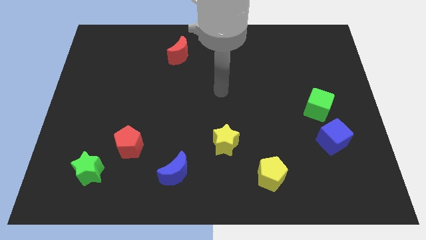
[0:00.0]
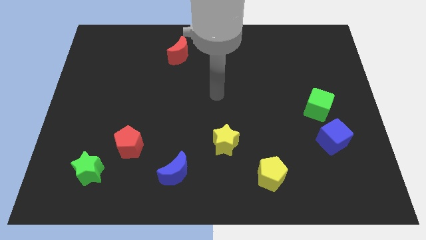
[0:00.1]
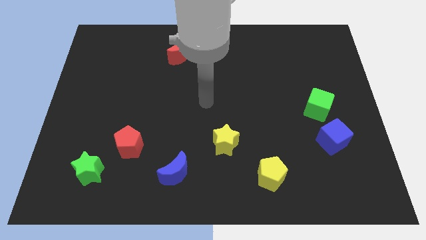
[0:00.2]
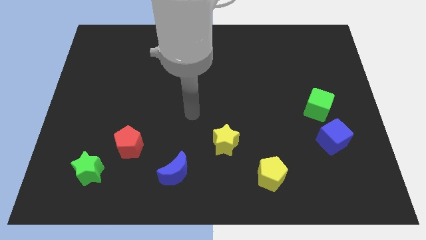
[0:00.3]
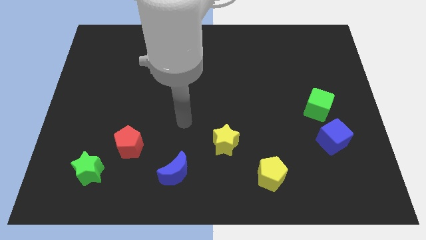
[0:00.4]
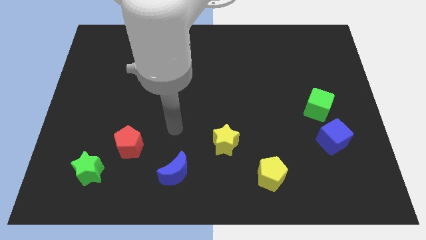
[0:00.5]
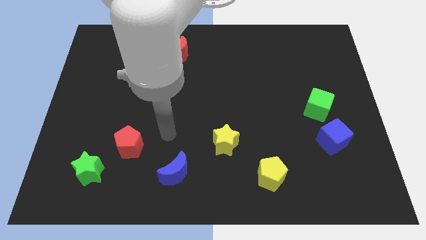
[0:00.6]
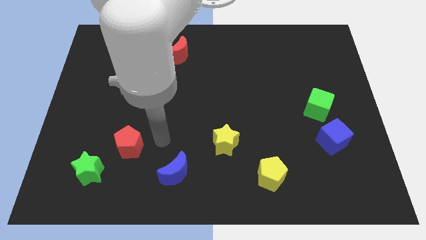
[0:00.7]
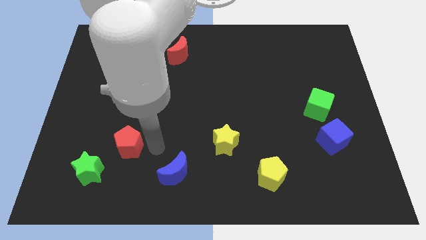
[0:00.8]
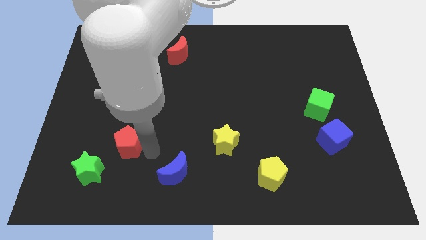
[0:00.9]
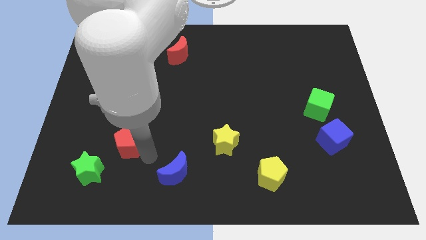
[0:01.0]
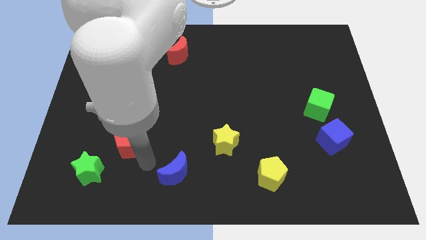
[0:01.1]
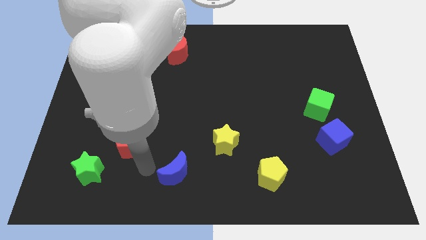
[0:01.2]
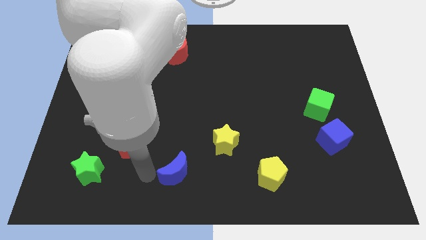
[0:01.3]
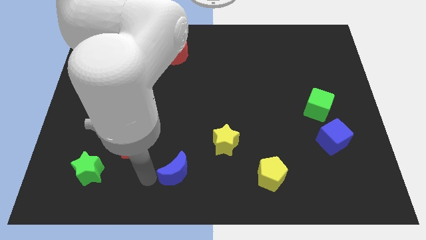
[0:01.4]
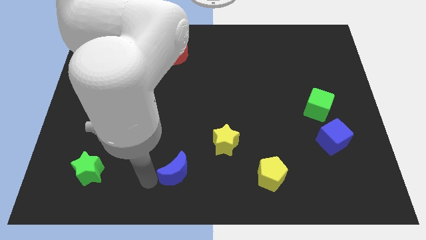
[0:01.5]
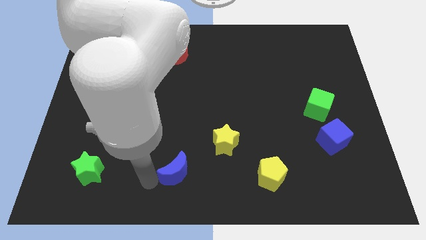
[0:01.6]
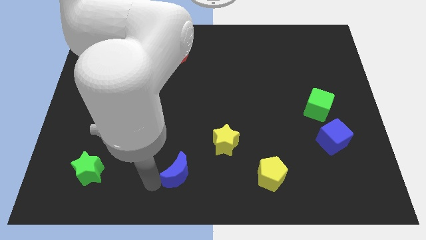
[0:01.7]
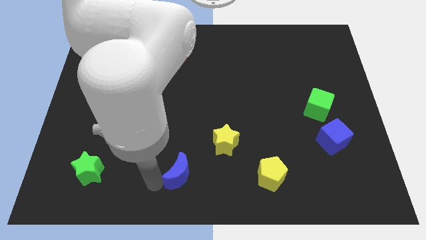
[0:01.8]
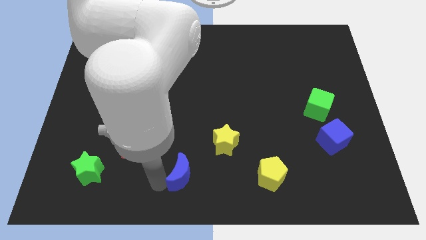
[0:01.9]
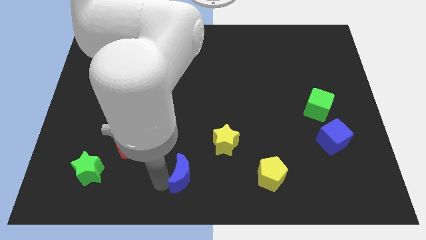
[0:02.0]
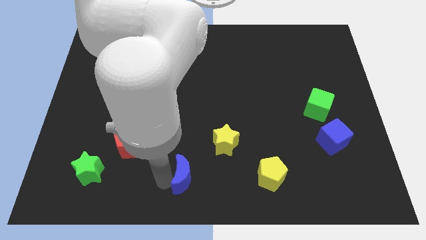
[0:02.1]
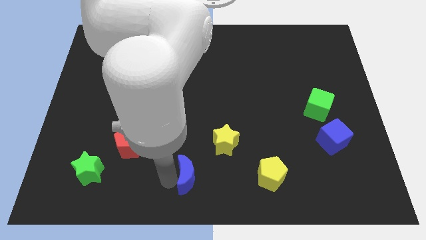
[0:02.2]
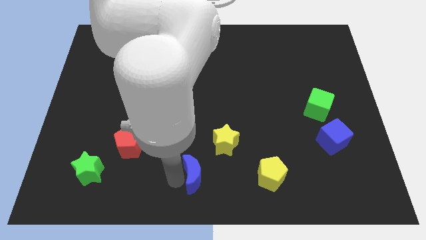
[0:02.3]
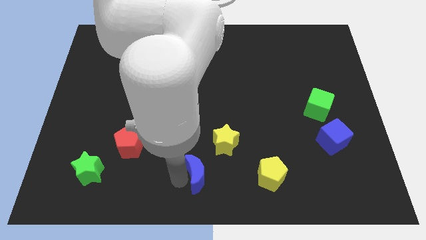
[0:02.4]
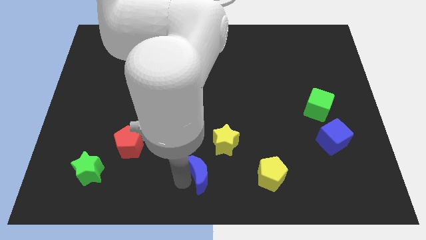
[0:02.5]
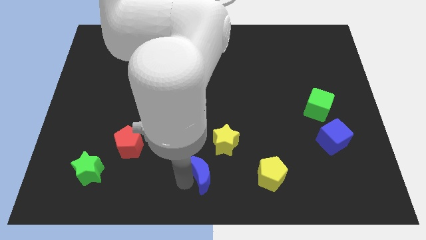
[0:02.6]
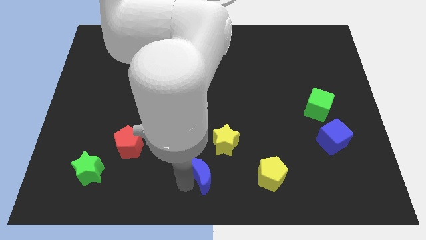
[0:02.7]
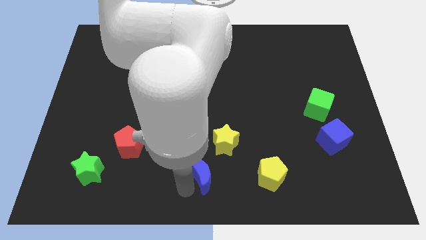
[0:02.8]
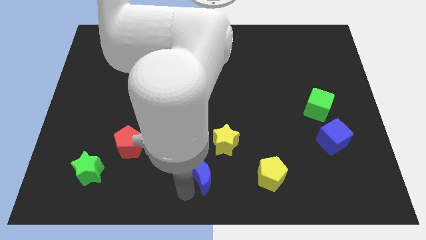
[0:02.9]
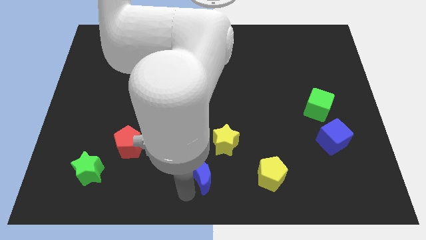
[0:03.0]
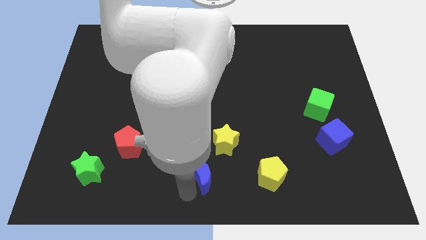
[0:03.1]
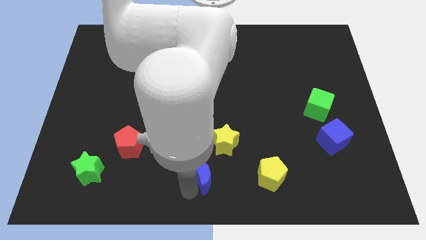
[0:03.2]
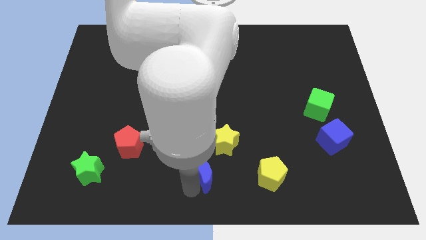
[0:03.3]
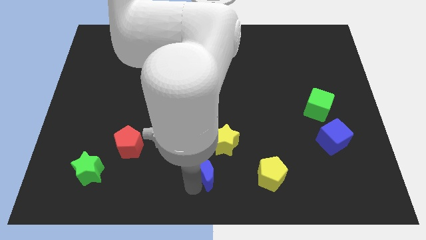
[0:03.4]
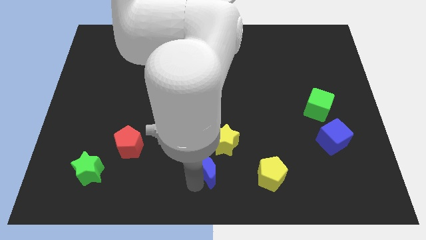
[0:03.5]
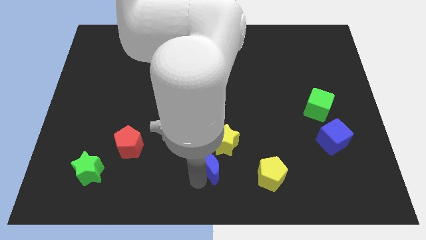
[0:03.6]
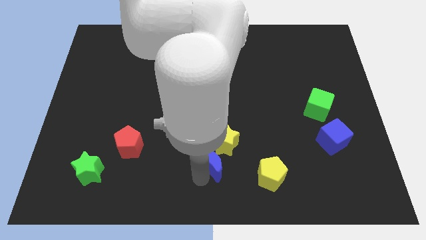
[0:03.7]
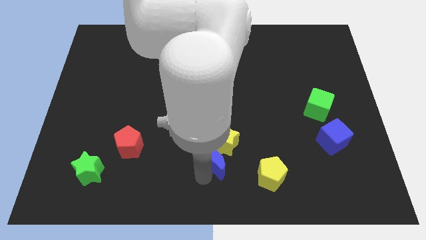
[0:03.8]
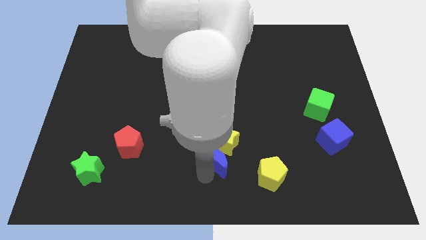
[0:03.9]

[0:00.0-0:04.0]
push the blue moon close to the yellow star

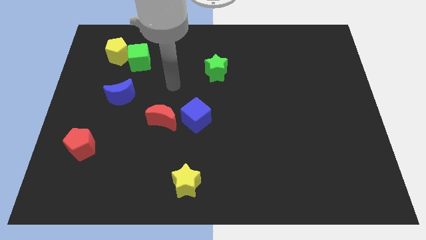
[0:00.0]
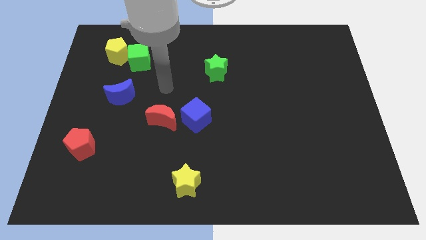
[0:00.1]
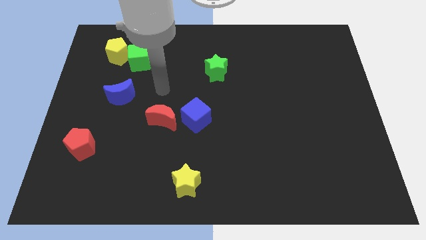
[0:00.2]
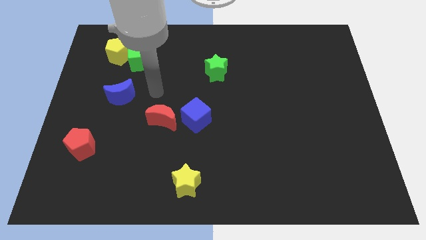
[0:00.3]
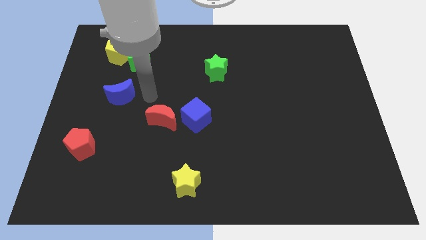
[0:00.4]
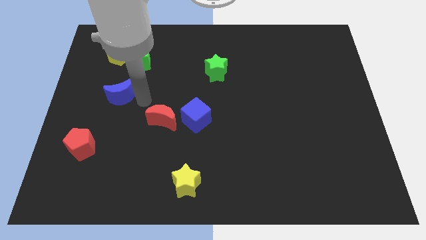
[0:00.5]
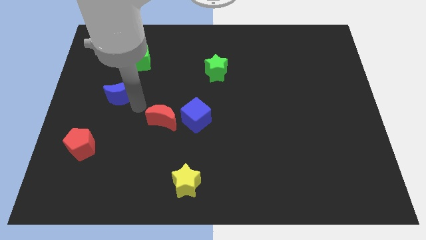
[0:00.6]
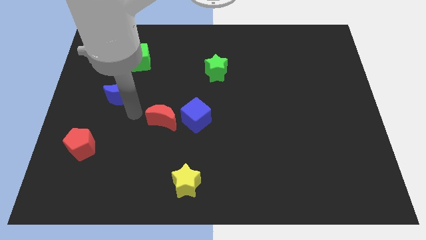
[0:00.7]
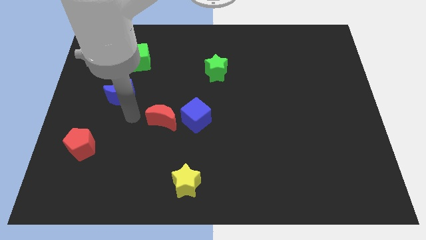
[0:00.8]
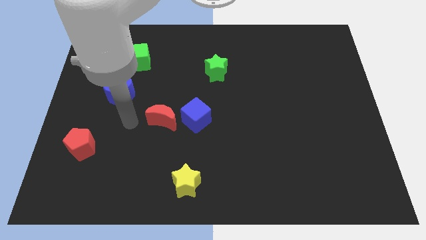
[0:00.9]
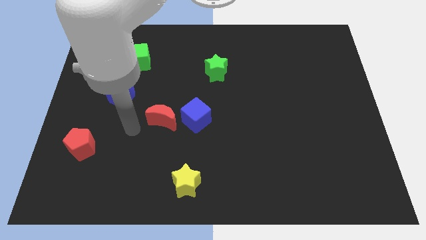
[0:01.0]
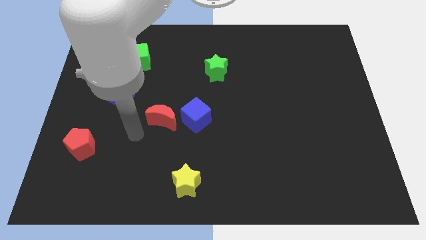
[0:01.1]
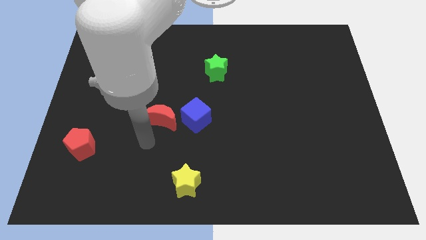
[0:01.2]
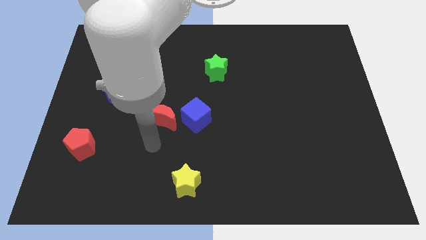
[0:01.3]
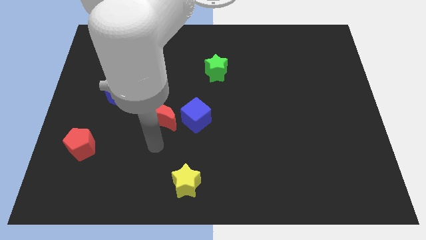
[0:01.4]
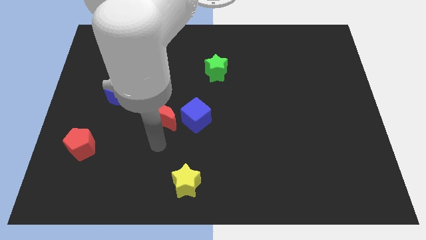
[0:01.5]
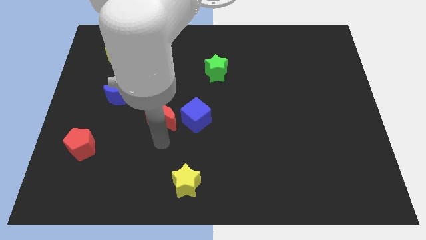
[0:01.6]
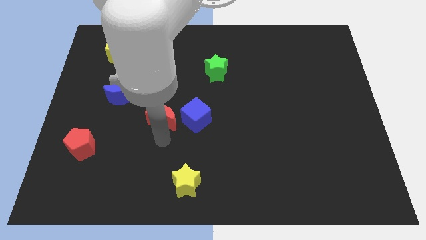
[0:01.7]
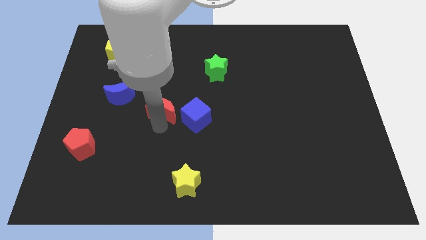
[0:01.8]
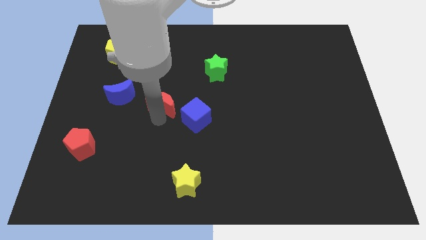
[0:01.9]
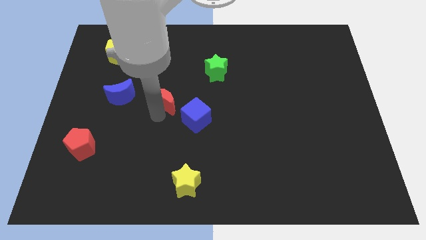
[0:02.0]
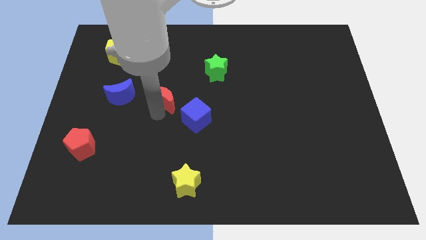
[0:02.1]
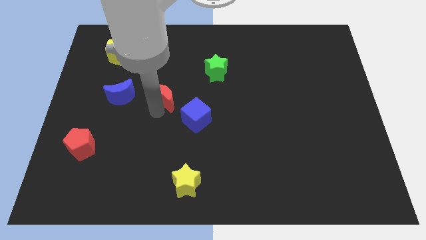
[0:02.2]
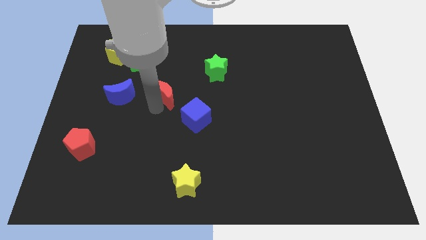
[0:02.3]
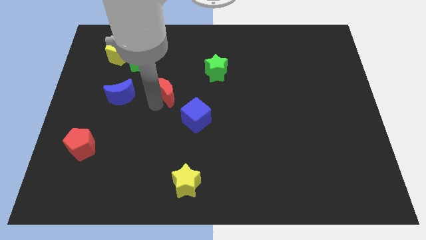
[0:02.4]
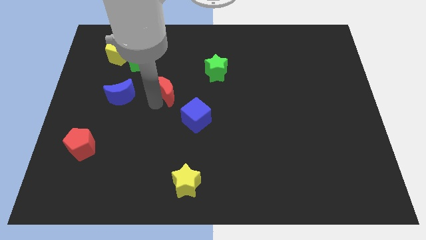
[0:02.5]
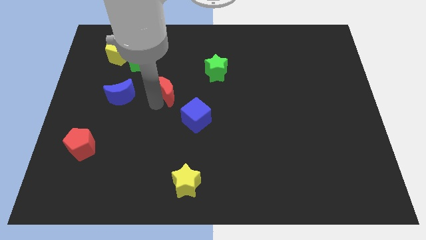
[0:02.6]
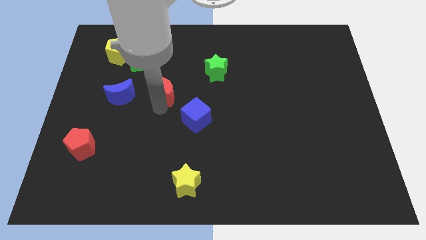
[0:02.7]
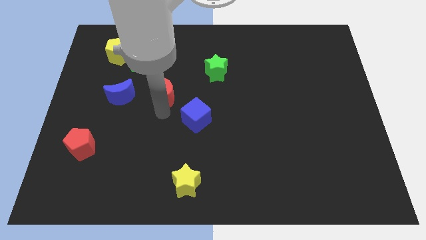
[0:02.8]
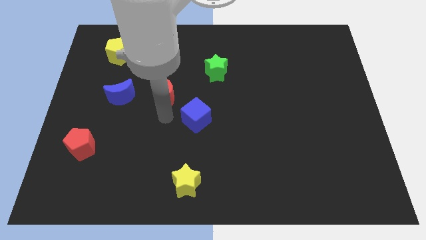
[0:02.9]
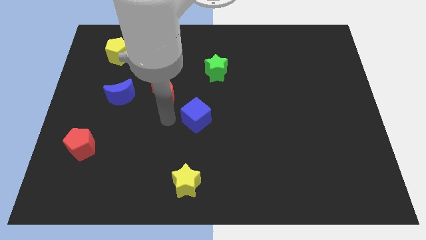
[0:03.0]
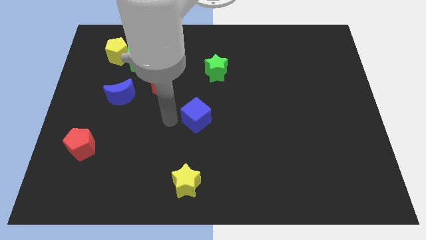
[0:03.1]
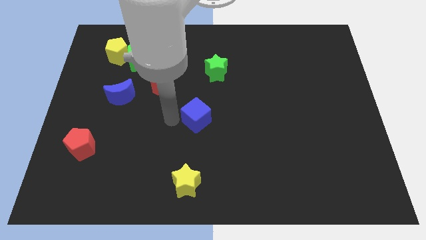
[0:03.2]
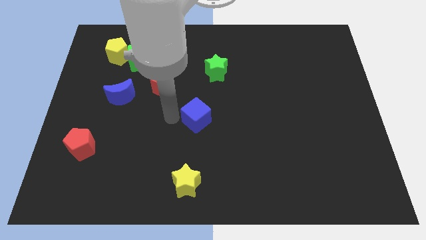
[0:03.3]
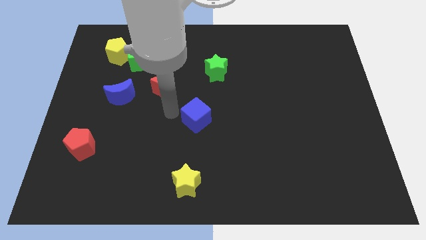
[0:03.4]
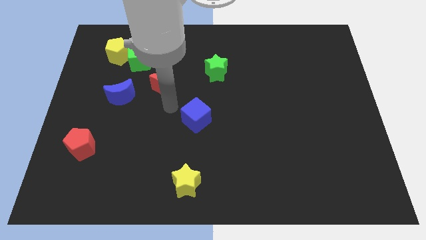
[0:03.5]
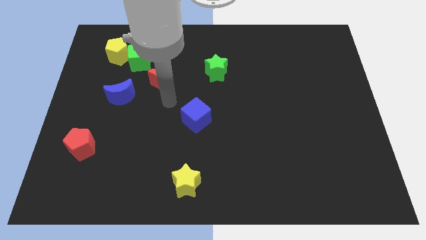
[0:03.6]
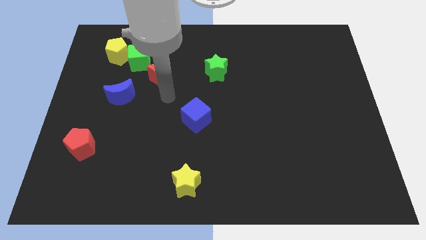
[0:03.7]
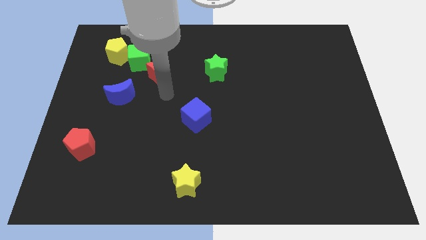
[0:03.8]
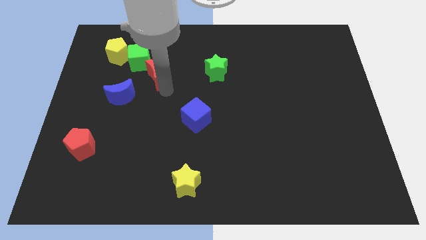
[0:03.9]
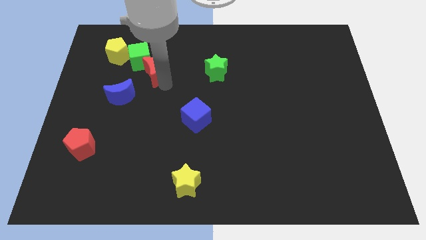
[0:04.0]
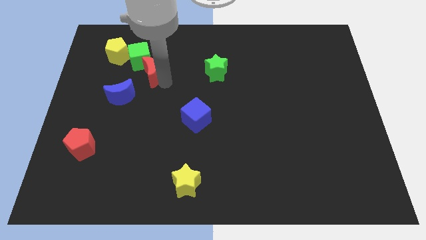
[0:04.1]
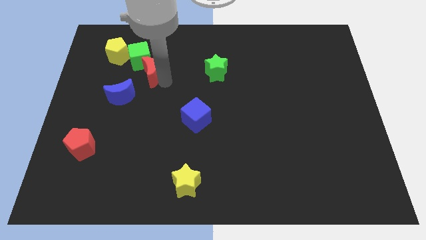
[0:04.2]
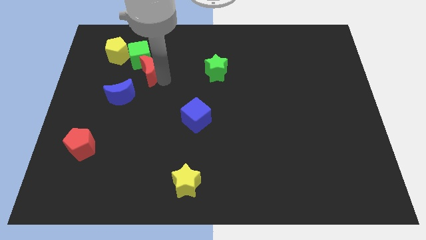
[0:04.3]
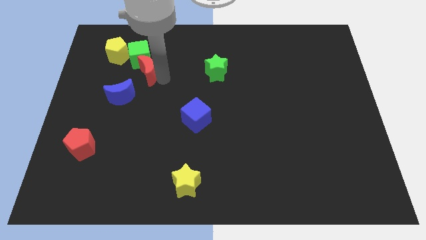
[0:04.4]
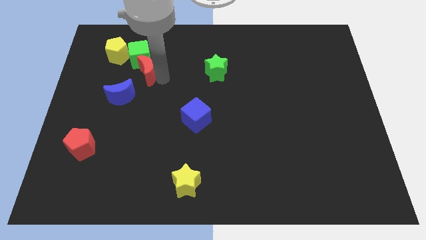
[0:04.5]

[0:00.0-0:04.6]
push the red moon towards the green cube
